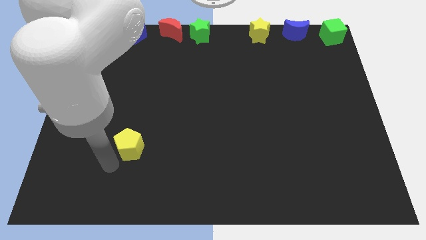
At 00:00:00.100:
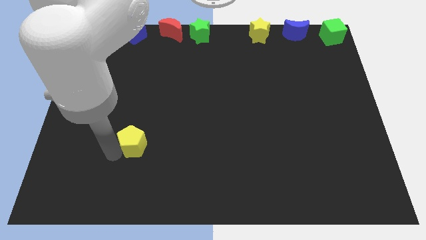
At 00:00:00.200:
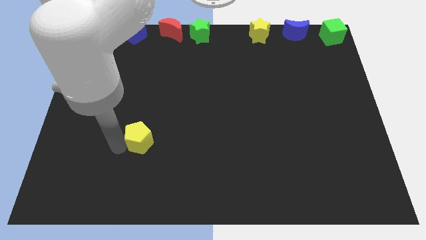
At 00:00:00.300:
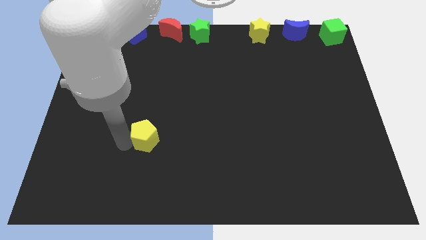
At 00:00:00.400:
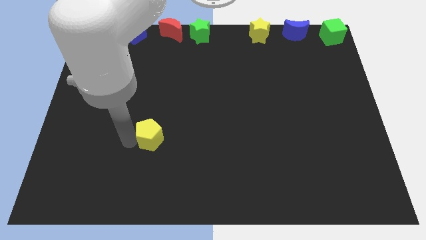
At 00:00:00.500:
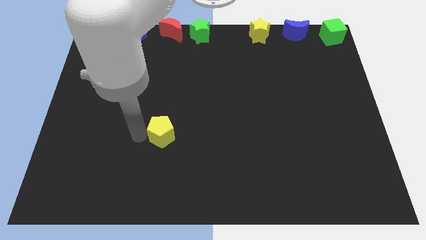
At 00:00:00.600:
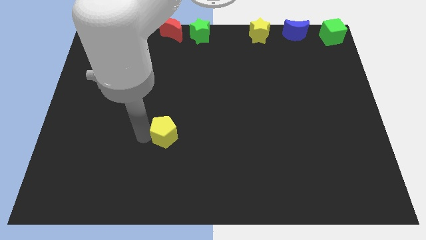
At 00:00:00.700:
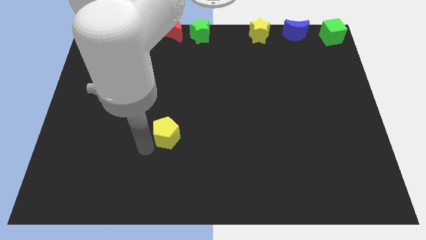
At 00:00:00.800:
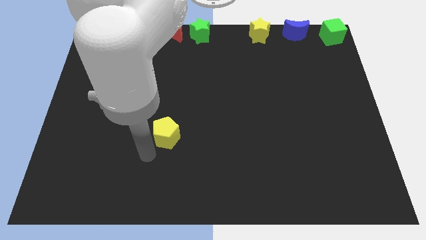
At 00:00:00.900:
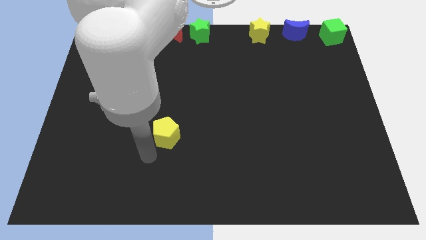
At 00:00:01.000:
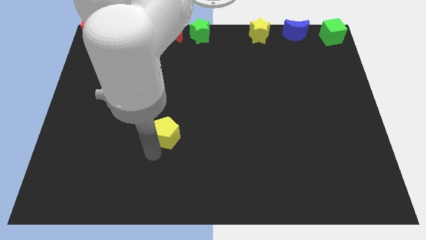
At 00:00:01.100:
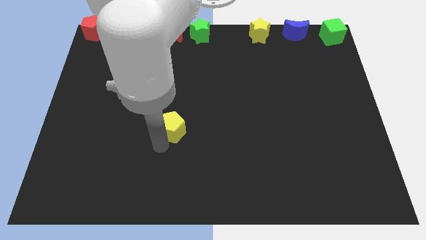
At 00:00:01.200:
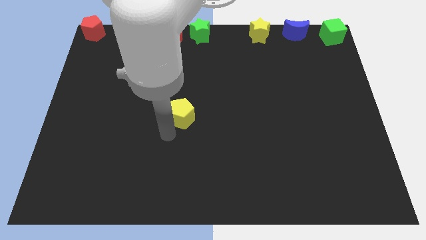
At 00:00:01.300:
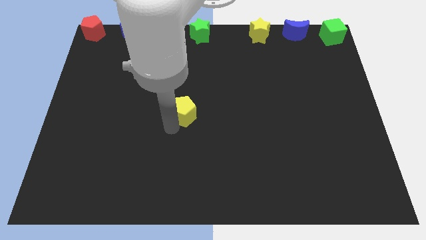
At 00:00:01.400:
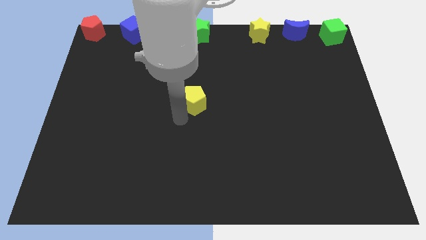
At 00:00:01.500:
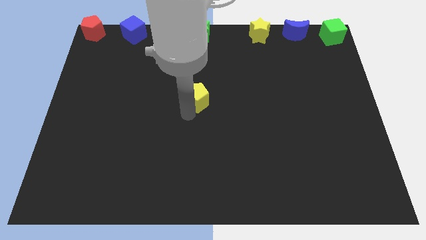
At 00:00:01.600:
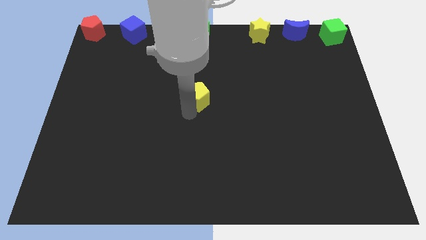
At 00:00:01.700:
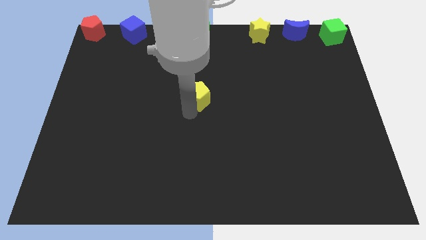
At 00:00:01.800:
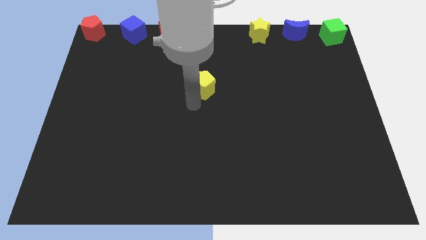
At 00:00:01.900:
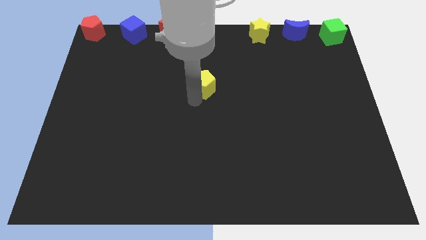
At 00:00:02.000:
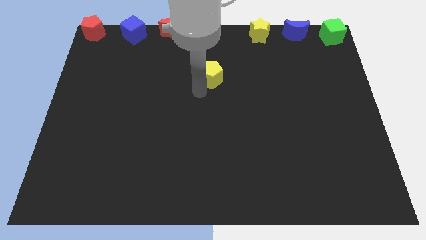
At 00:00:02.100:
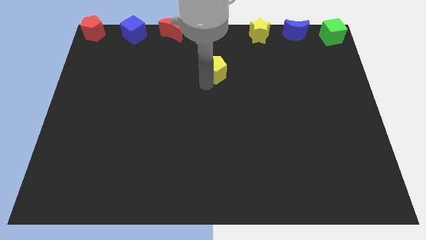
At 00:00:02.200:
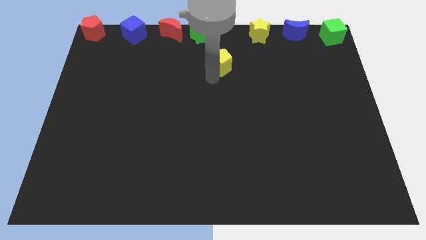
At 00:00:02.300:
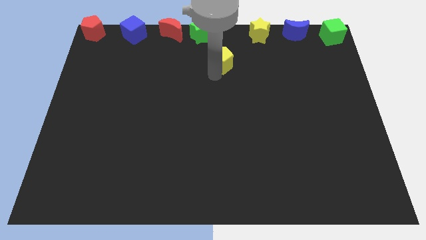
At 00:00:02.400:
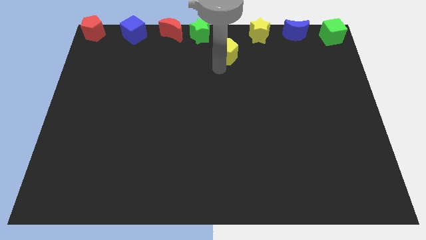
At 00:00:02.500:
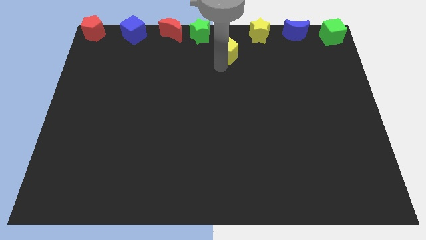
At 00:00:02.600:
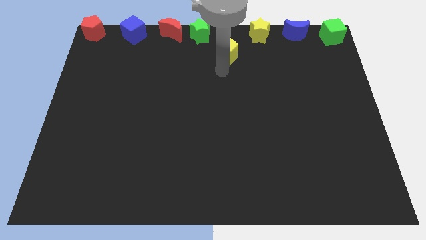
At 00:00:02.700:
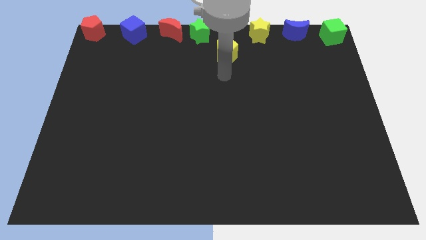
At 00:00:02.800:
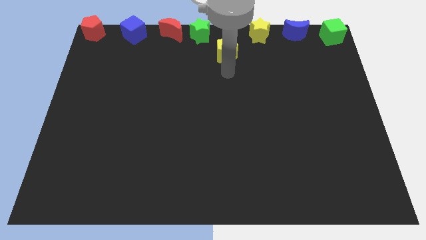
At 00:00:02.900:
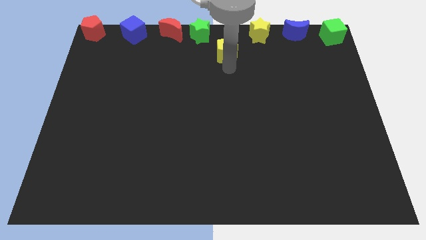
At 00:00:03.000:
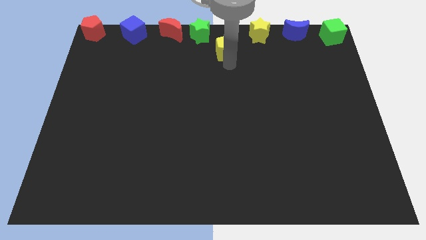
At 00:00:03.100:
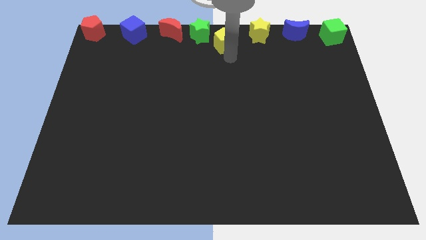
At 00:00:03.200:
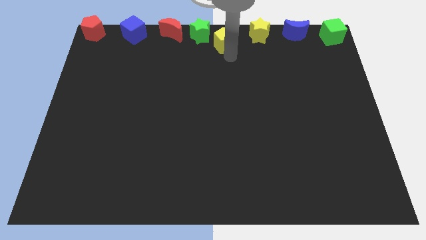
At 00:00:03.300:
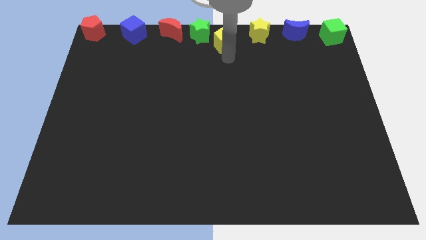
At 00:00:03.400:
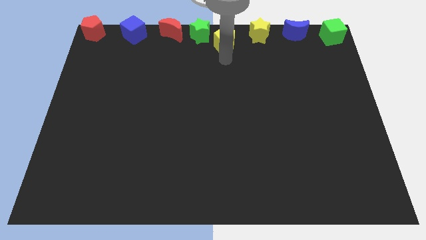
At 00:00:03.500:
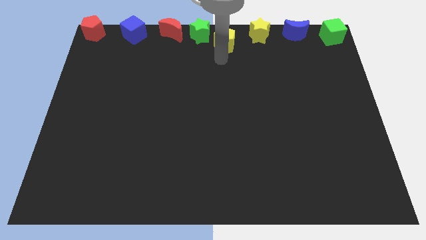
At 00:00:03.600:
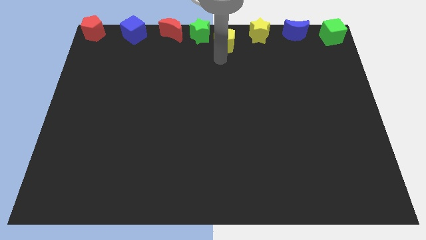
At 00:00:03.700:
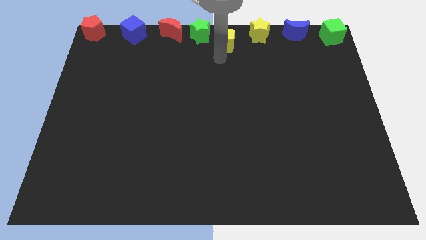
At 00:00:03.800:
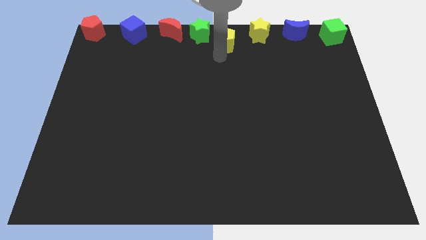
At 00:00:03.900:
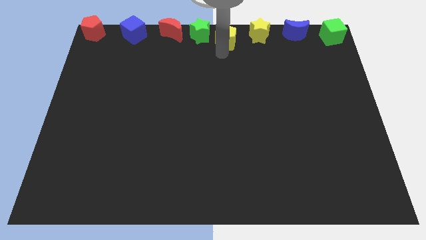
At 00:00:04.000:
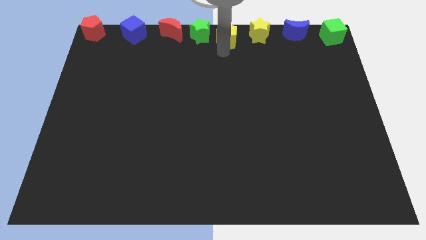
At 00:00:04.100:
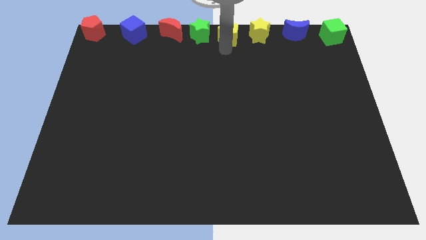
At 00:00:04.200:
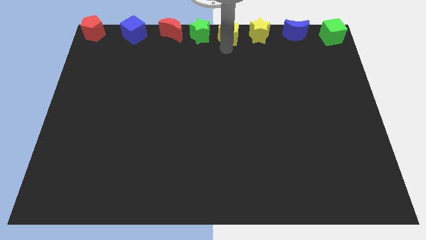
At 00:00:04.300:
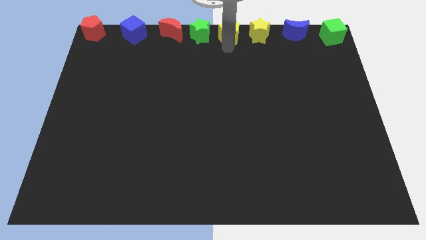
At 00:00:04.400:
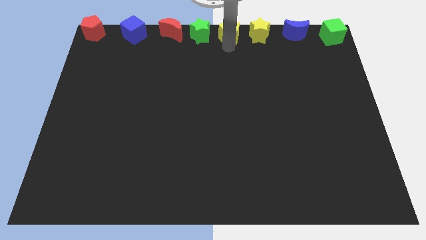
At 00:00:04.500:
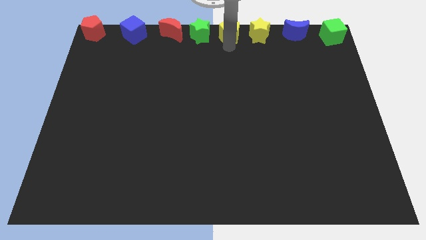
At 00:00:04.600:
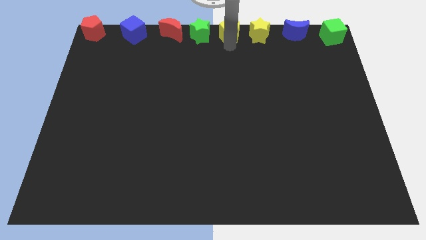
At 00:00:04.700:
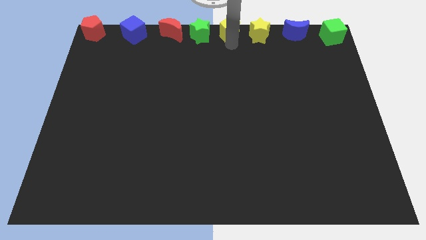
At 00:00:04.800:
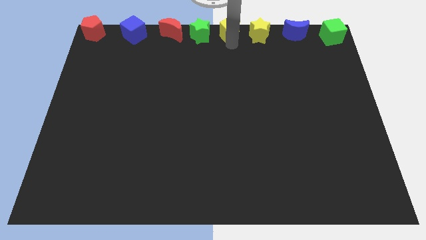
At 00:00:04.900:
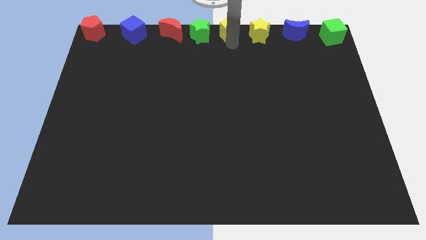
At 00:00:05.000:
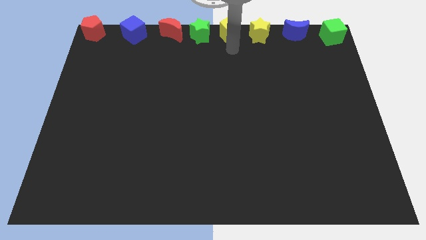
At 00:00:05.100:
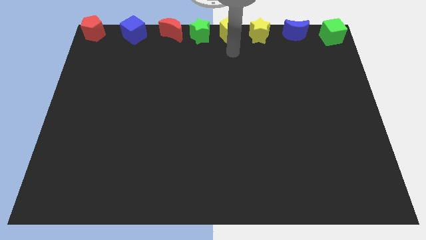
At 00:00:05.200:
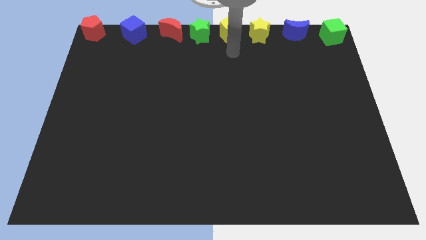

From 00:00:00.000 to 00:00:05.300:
place the yellow pentagon in between the yellow star and green star

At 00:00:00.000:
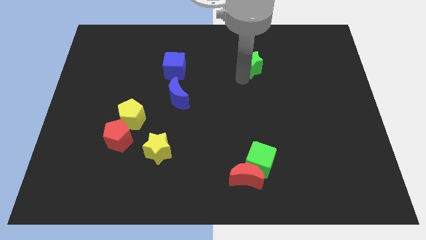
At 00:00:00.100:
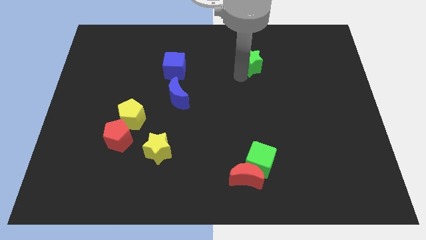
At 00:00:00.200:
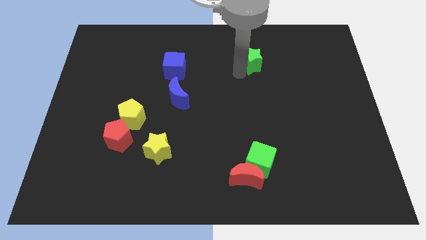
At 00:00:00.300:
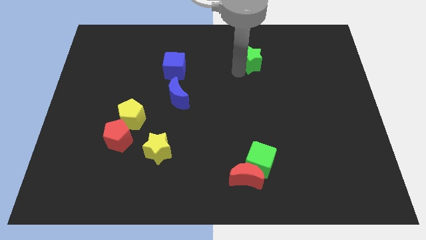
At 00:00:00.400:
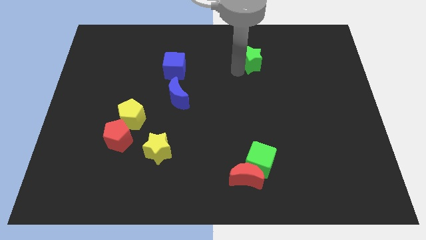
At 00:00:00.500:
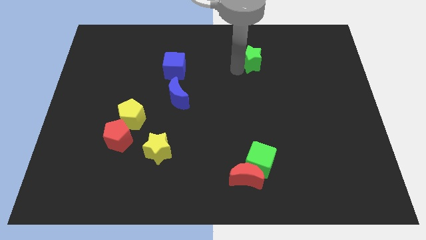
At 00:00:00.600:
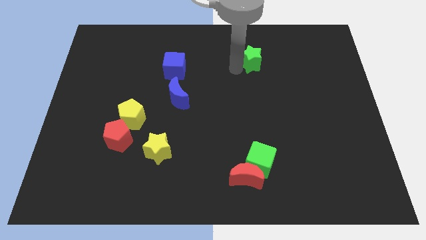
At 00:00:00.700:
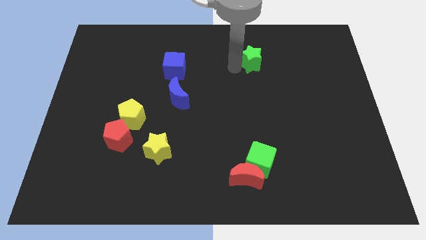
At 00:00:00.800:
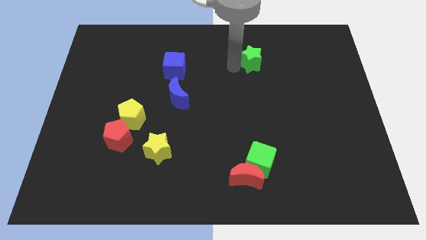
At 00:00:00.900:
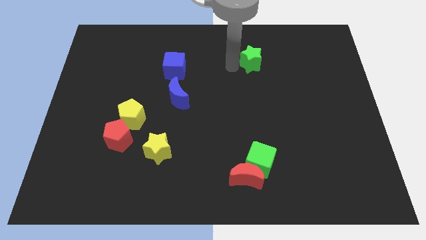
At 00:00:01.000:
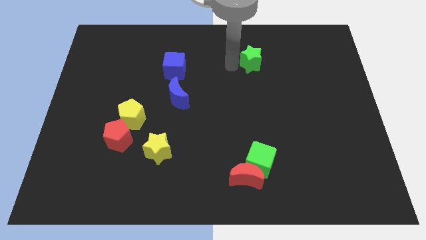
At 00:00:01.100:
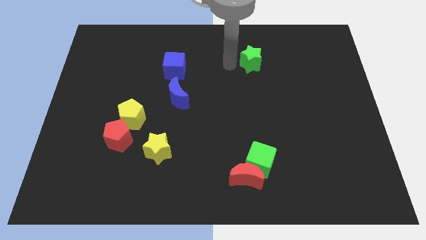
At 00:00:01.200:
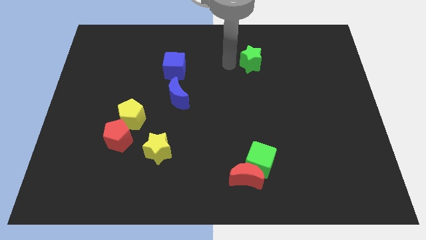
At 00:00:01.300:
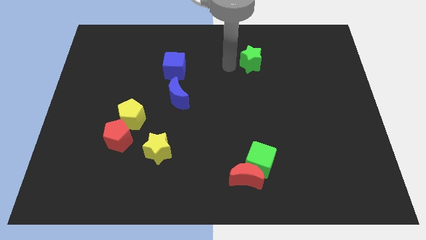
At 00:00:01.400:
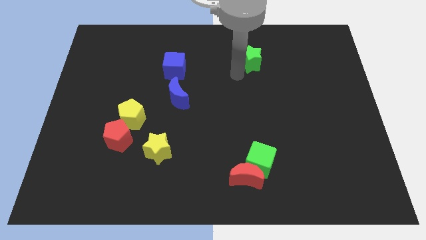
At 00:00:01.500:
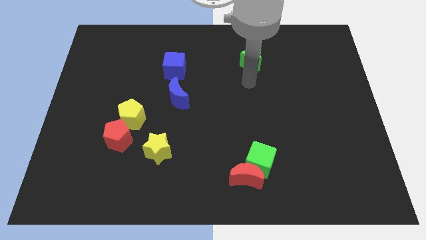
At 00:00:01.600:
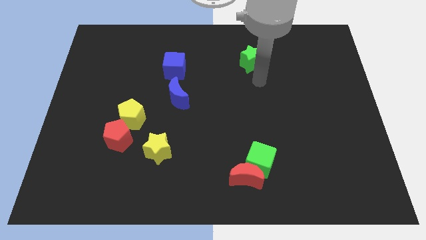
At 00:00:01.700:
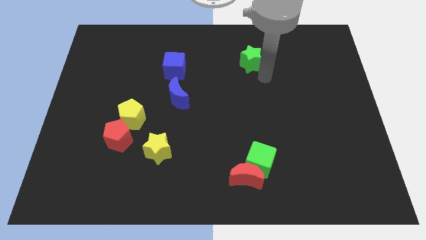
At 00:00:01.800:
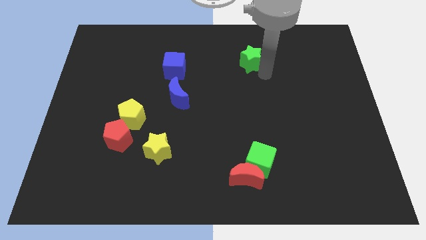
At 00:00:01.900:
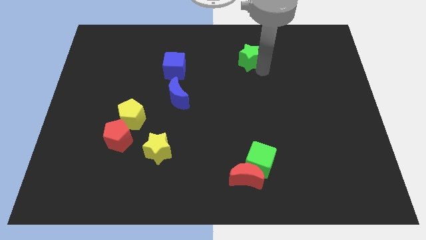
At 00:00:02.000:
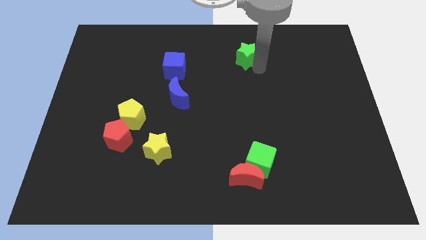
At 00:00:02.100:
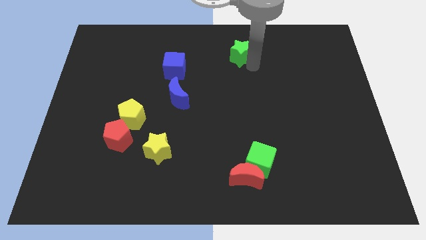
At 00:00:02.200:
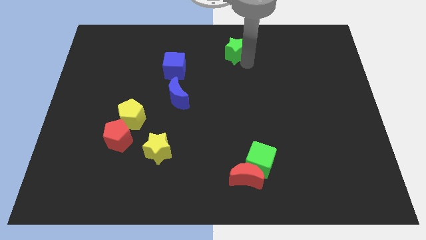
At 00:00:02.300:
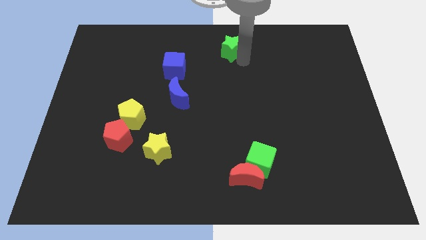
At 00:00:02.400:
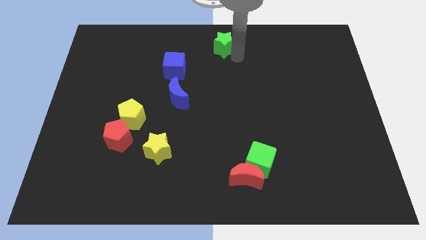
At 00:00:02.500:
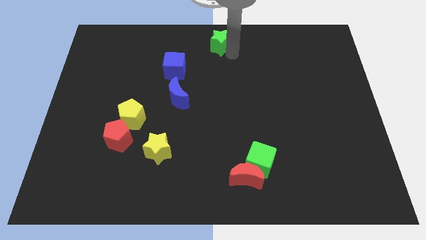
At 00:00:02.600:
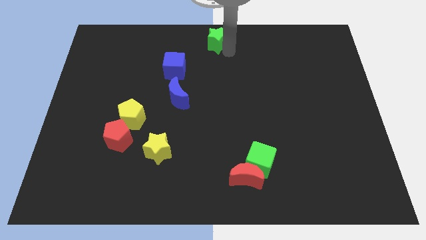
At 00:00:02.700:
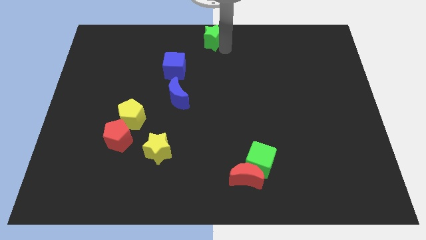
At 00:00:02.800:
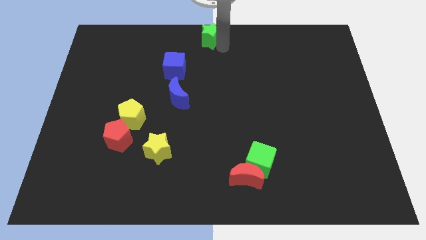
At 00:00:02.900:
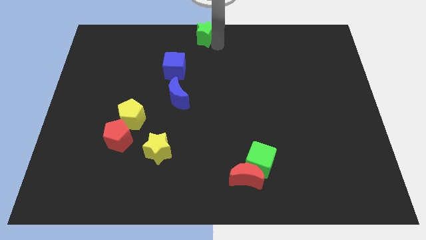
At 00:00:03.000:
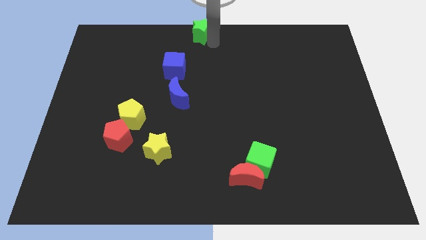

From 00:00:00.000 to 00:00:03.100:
place the green star at the top center of the board

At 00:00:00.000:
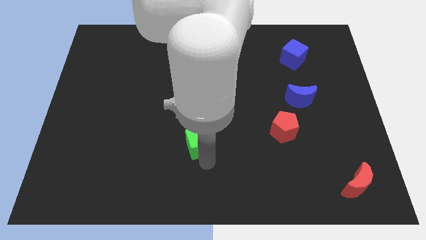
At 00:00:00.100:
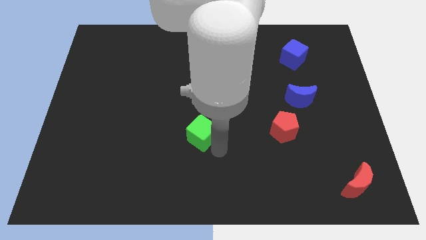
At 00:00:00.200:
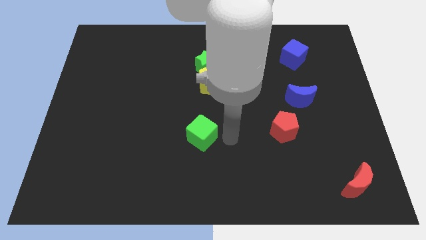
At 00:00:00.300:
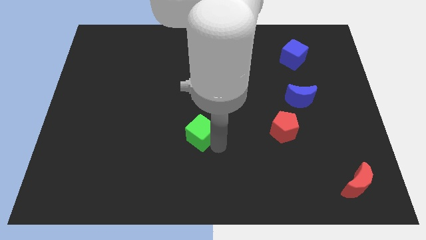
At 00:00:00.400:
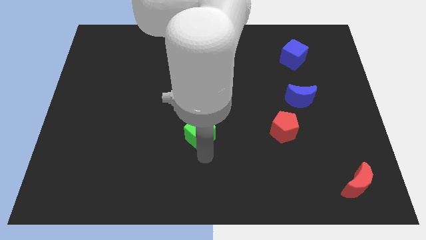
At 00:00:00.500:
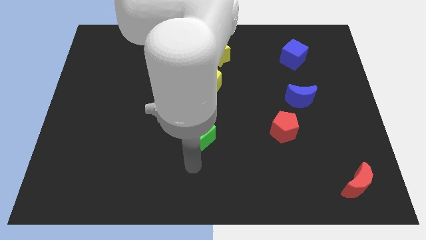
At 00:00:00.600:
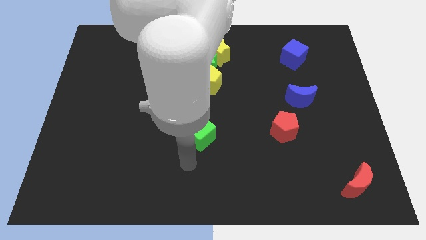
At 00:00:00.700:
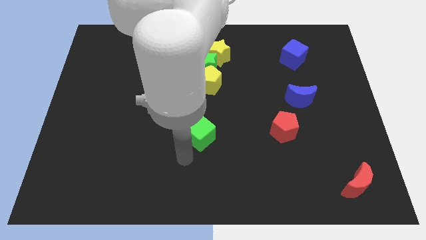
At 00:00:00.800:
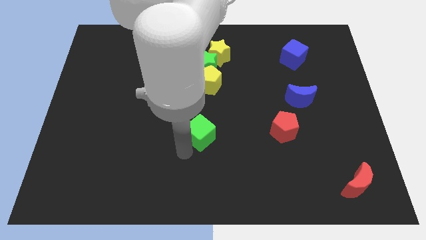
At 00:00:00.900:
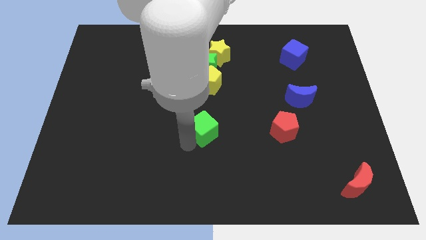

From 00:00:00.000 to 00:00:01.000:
place the green cube parallel to red pentagon
